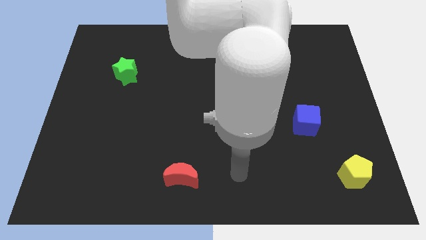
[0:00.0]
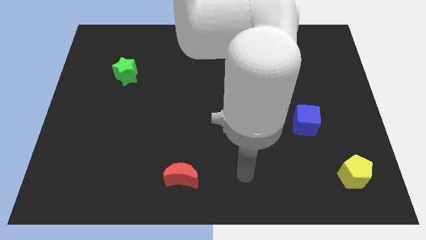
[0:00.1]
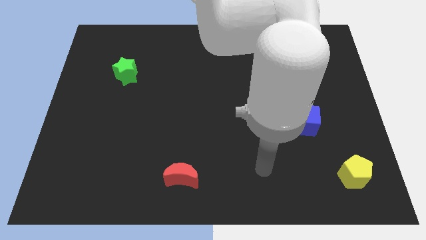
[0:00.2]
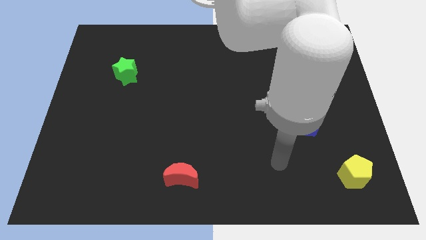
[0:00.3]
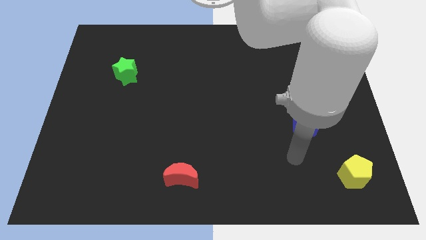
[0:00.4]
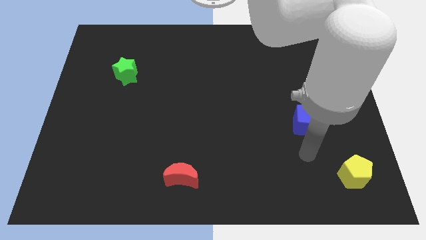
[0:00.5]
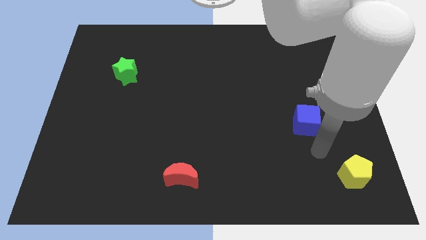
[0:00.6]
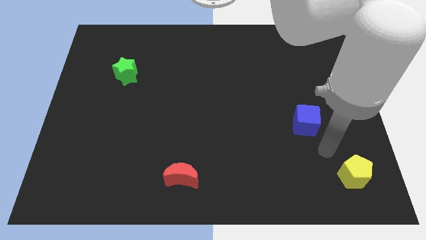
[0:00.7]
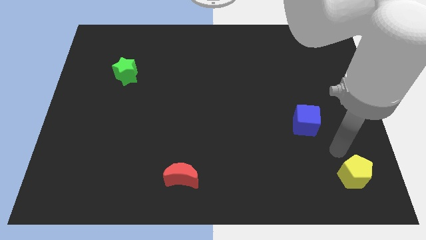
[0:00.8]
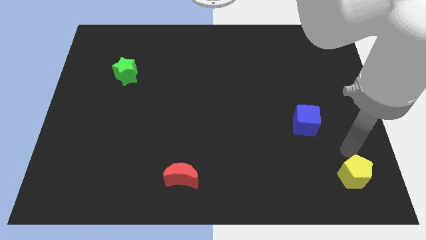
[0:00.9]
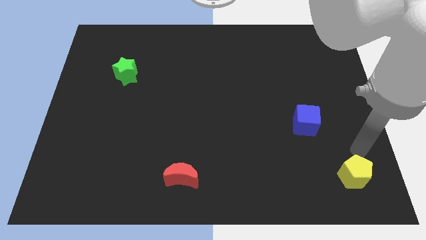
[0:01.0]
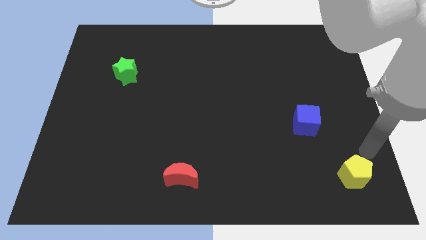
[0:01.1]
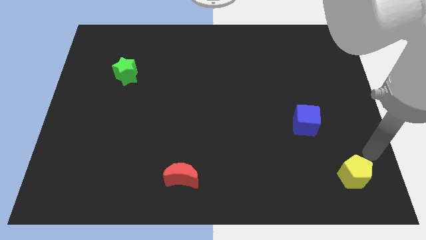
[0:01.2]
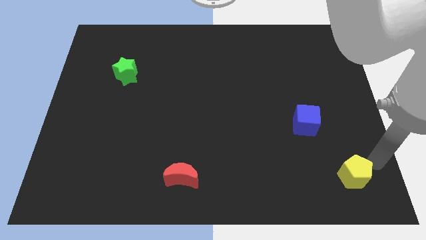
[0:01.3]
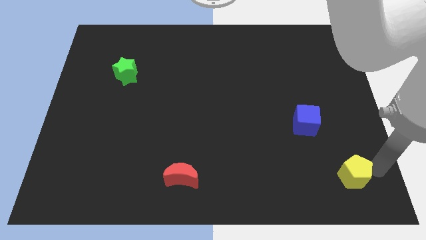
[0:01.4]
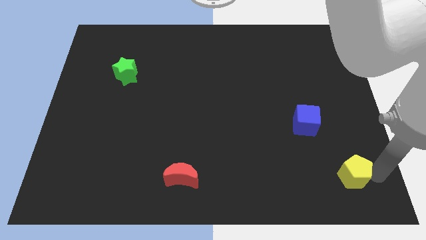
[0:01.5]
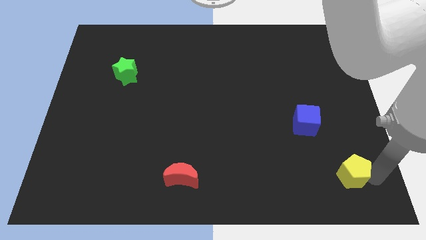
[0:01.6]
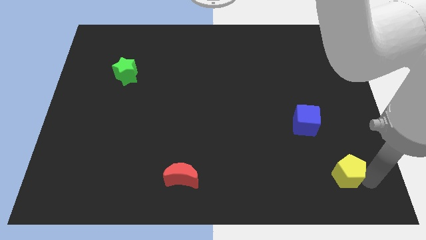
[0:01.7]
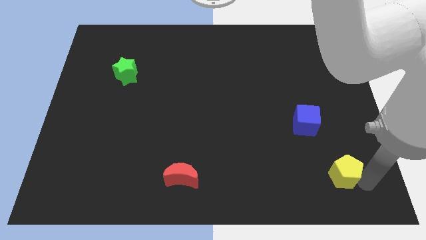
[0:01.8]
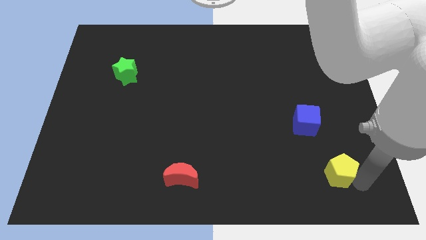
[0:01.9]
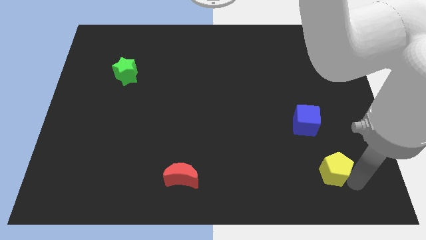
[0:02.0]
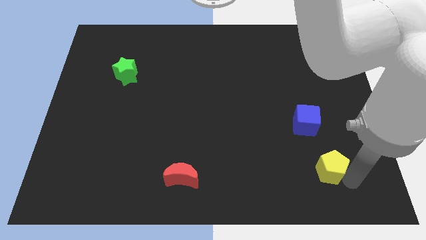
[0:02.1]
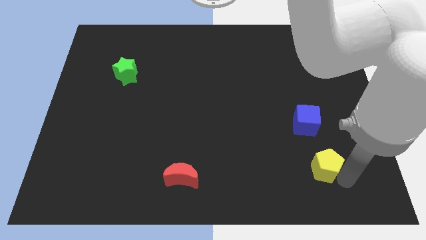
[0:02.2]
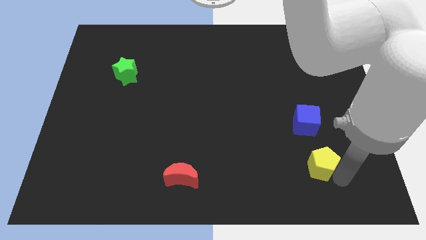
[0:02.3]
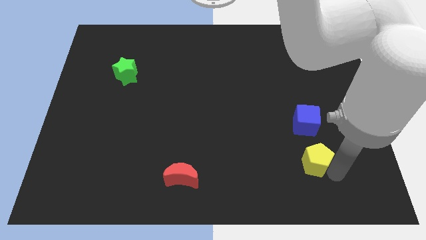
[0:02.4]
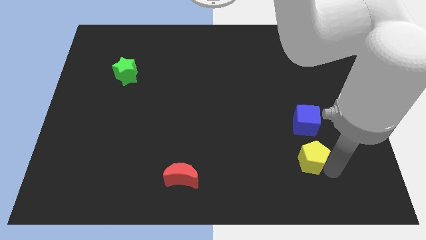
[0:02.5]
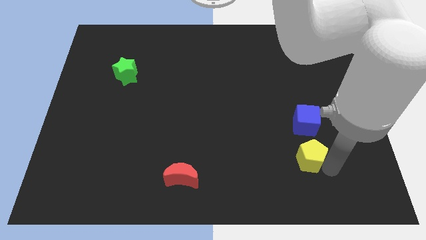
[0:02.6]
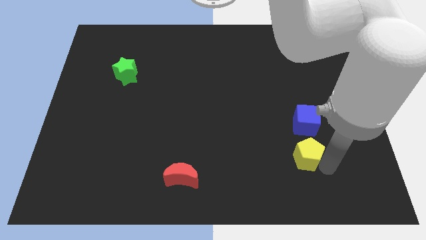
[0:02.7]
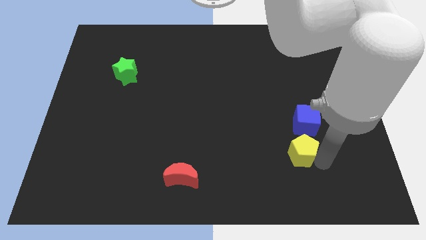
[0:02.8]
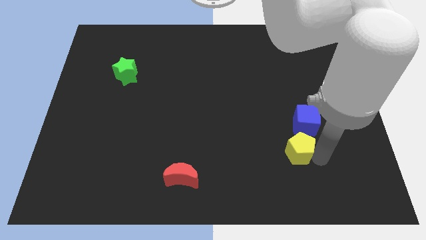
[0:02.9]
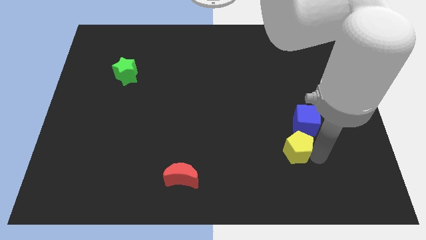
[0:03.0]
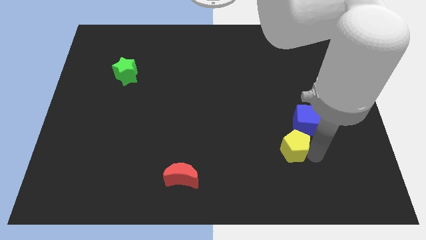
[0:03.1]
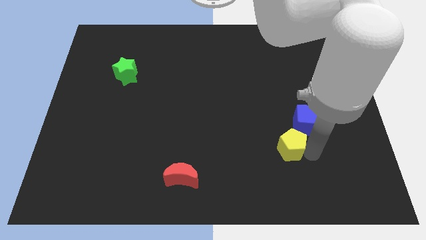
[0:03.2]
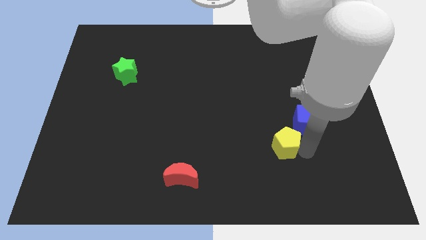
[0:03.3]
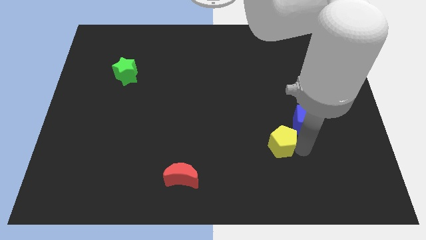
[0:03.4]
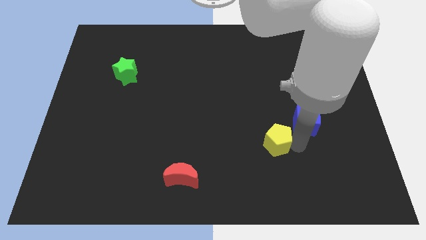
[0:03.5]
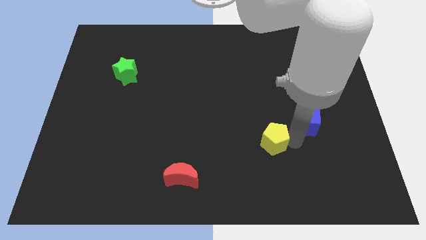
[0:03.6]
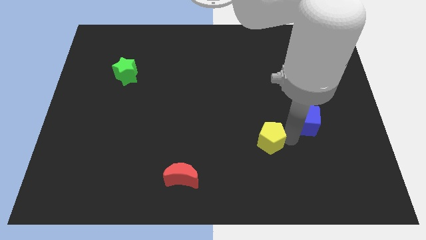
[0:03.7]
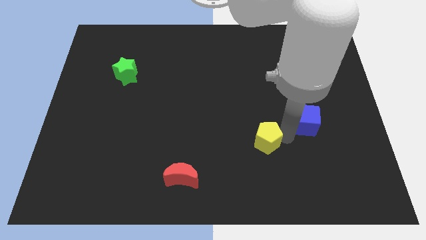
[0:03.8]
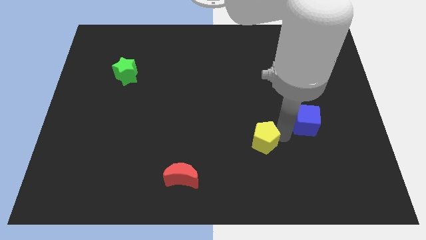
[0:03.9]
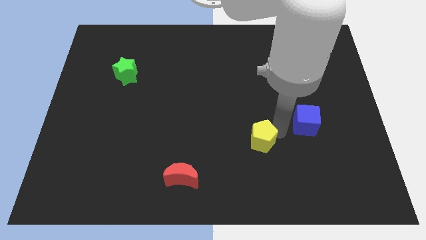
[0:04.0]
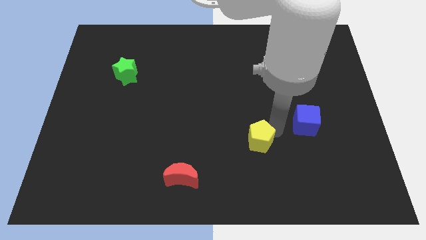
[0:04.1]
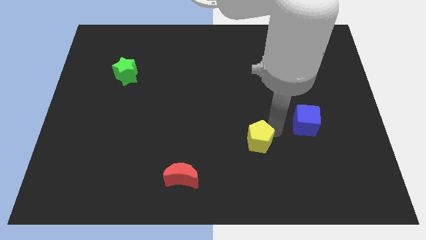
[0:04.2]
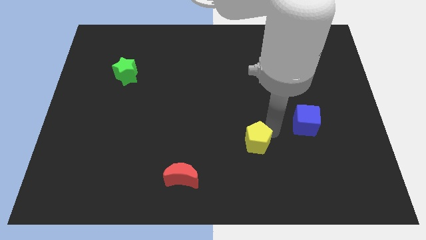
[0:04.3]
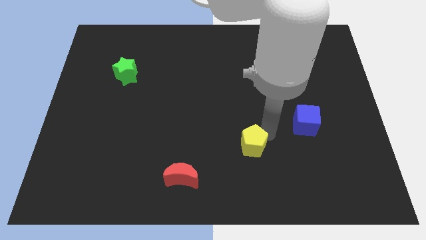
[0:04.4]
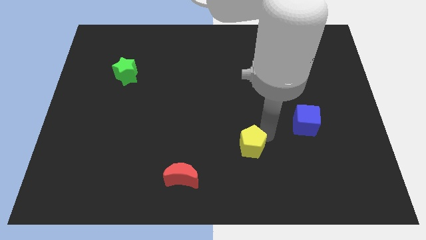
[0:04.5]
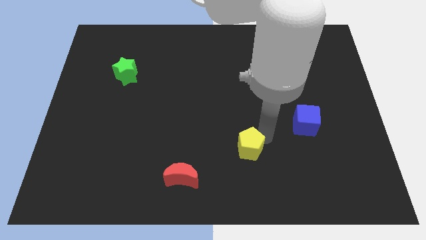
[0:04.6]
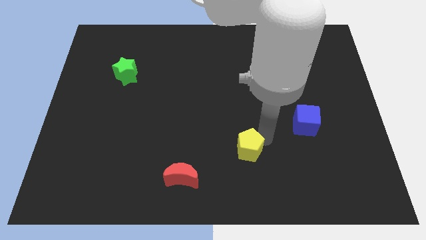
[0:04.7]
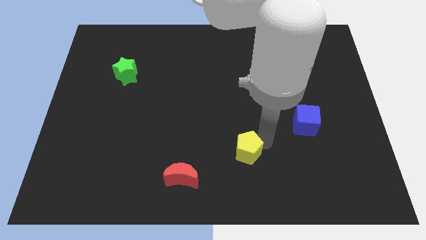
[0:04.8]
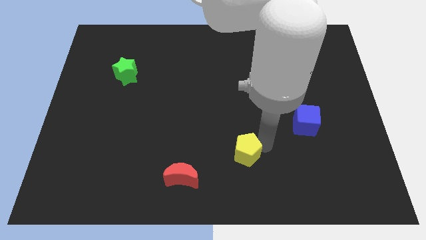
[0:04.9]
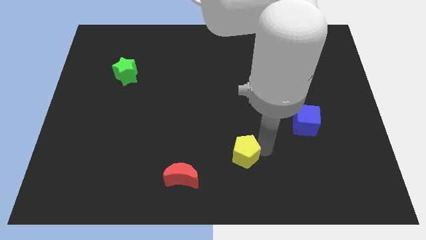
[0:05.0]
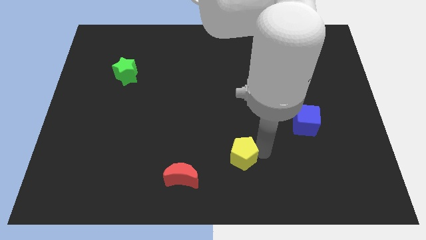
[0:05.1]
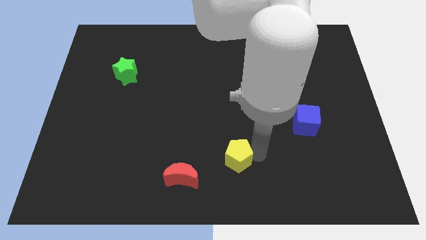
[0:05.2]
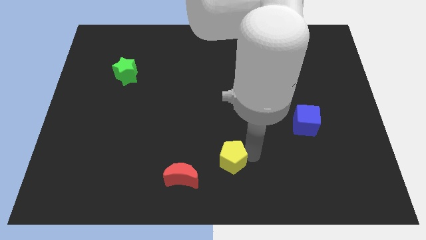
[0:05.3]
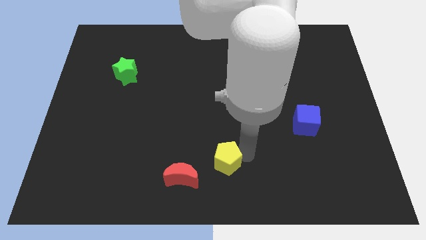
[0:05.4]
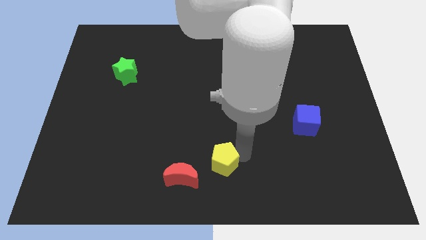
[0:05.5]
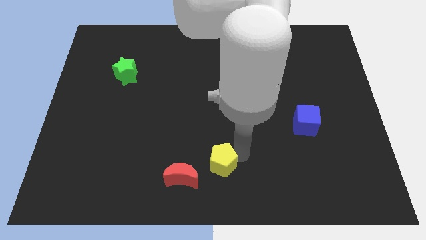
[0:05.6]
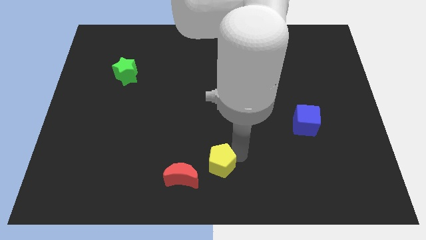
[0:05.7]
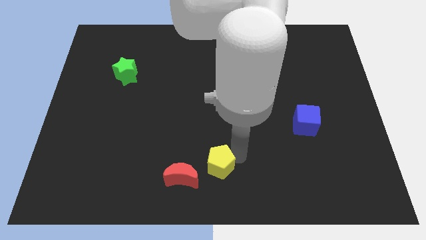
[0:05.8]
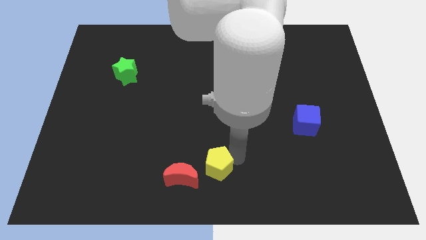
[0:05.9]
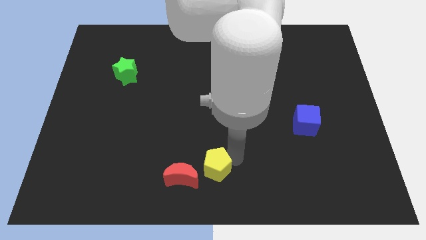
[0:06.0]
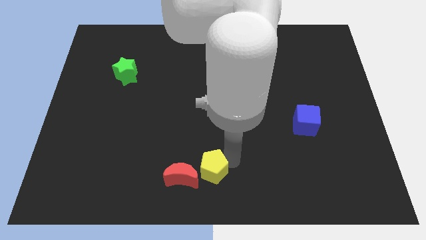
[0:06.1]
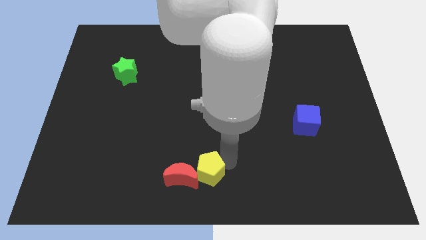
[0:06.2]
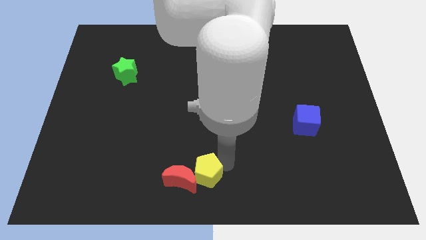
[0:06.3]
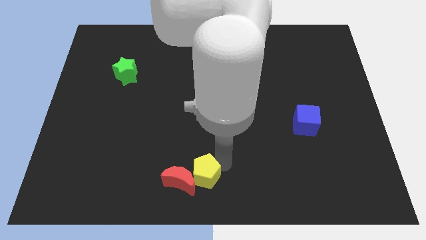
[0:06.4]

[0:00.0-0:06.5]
put the yellow block to the moon

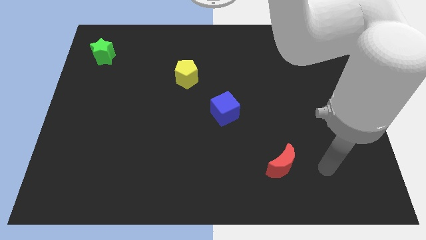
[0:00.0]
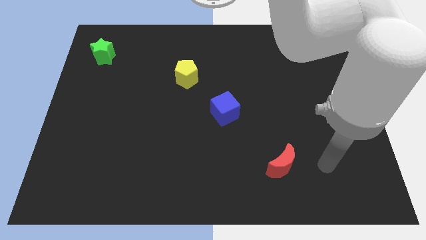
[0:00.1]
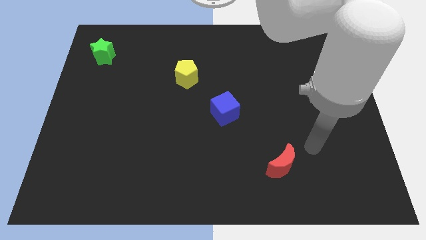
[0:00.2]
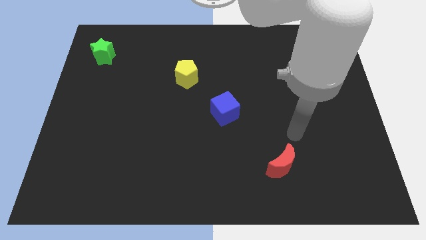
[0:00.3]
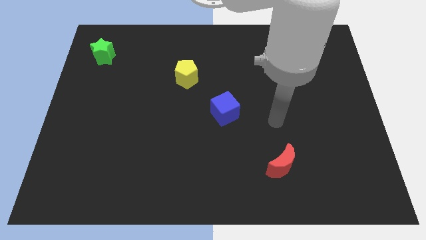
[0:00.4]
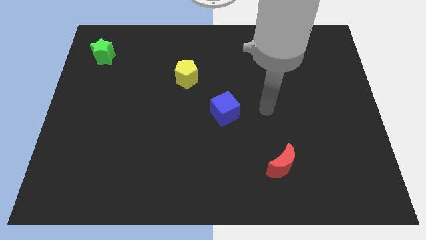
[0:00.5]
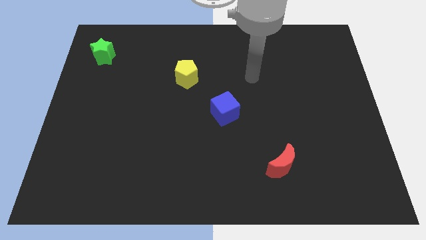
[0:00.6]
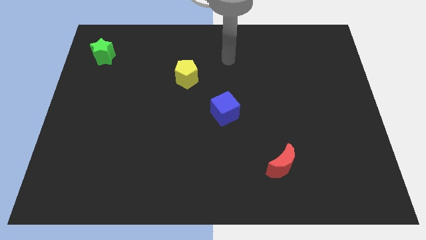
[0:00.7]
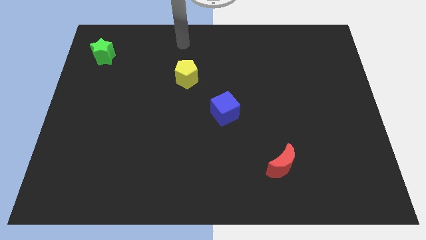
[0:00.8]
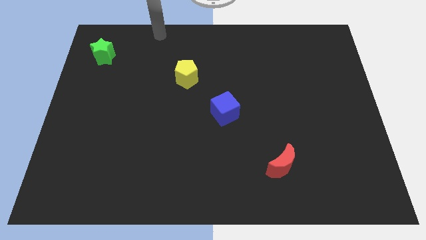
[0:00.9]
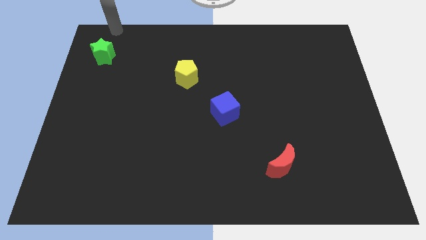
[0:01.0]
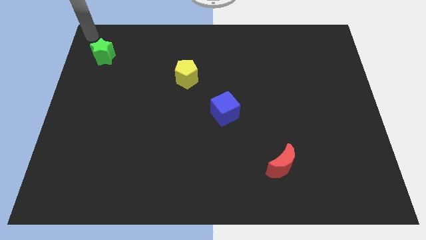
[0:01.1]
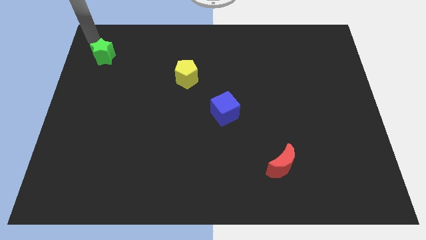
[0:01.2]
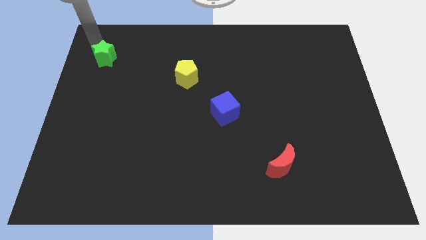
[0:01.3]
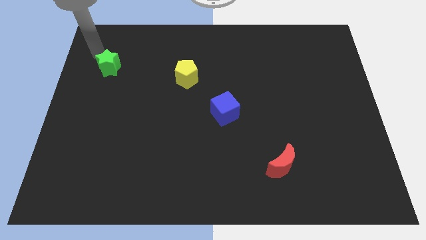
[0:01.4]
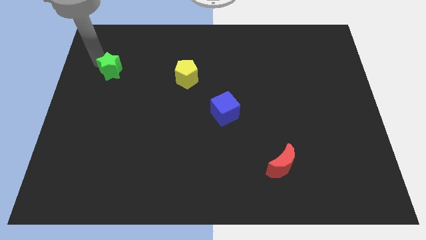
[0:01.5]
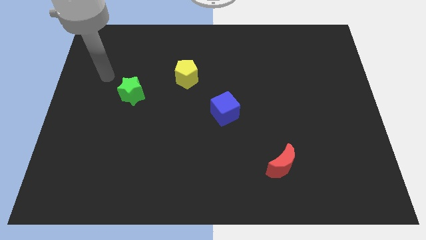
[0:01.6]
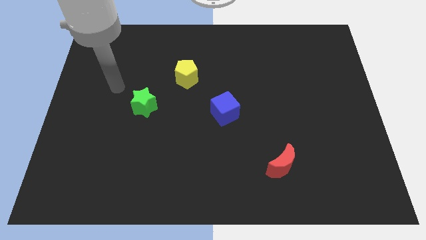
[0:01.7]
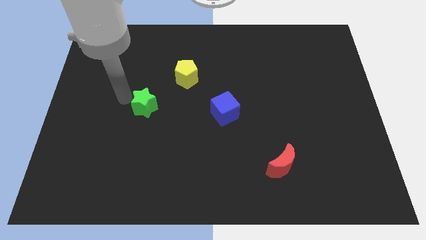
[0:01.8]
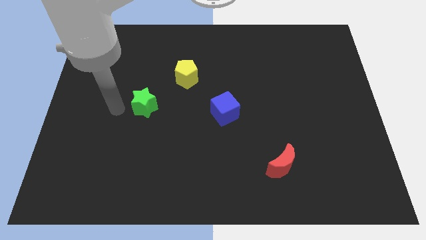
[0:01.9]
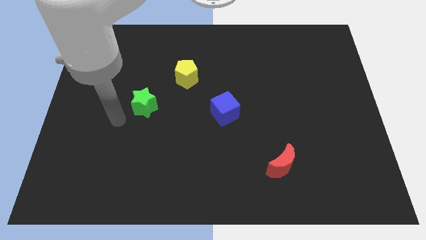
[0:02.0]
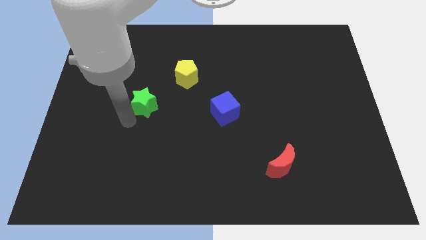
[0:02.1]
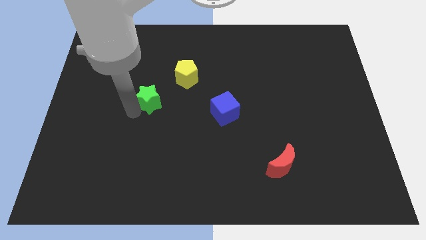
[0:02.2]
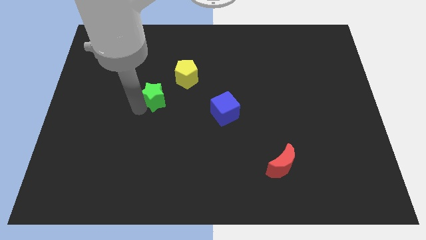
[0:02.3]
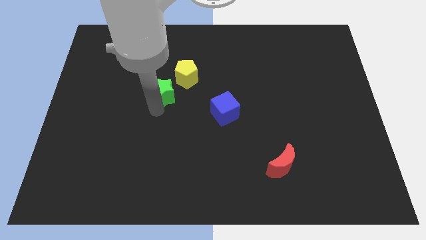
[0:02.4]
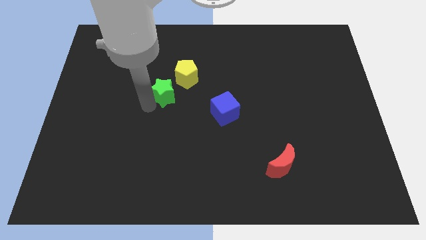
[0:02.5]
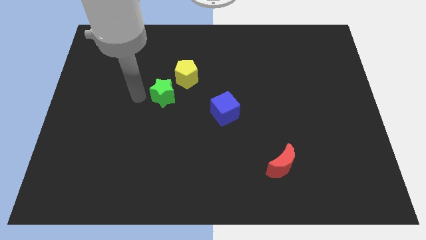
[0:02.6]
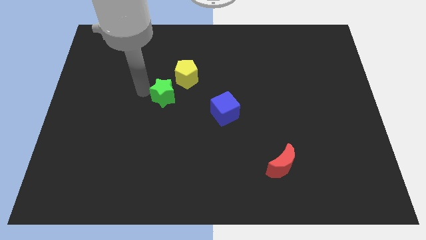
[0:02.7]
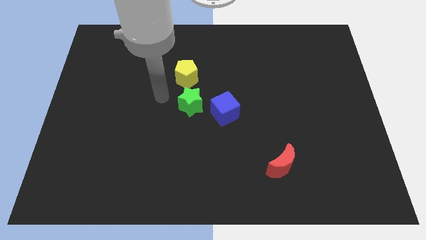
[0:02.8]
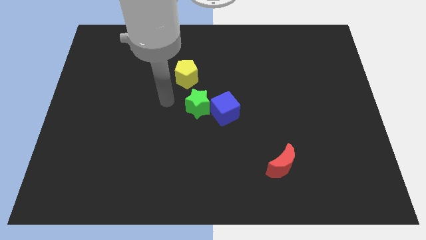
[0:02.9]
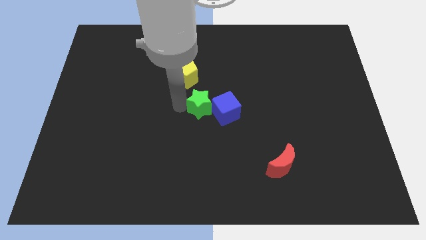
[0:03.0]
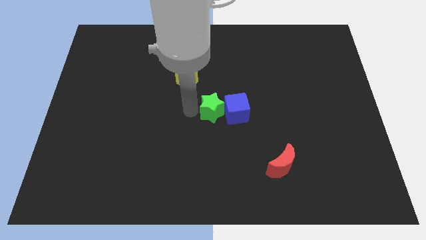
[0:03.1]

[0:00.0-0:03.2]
put the green star towards the cube
